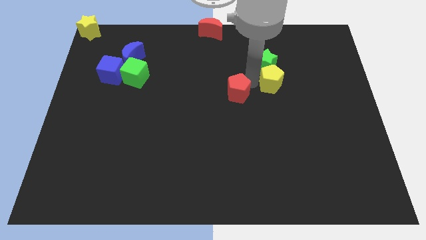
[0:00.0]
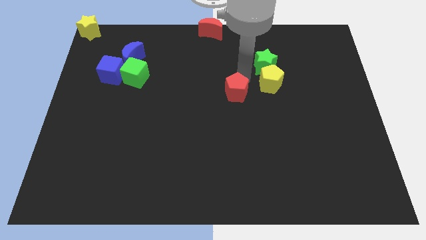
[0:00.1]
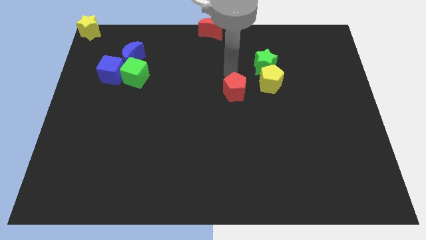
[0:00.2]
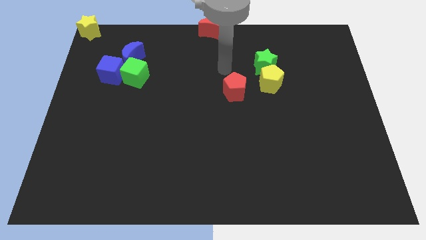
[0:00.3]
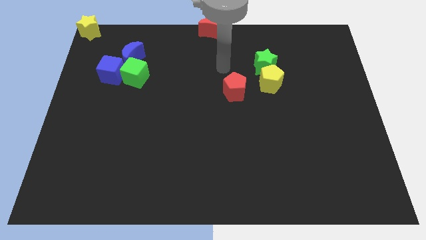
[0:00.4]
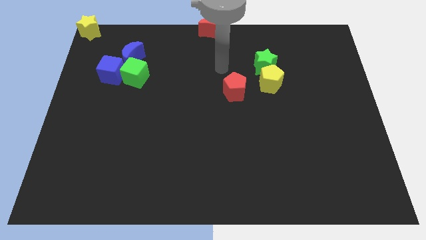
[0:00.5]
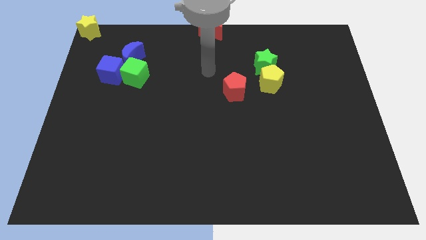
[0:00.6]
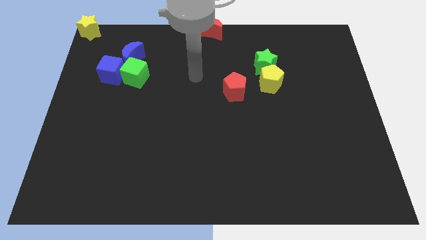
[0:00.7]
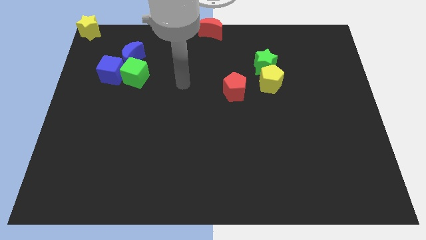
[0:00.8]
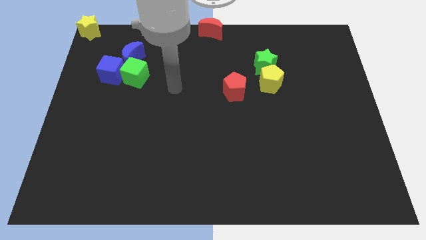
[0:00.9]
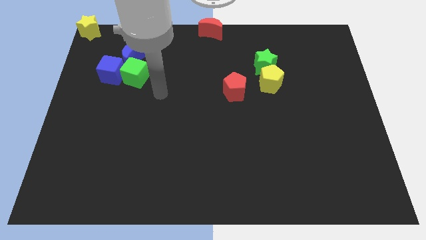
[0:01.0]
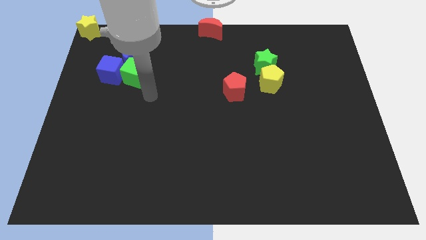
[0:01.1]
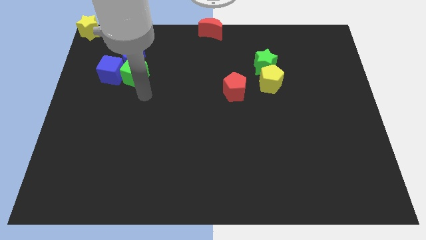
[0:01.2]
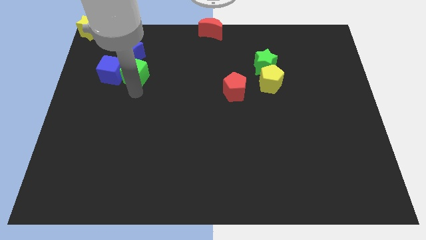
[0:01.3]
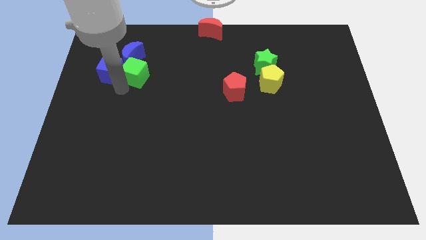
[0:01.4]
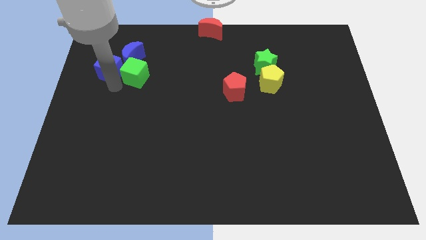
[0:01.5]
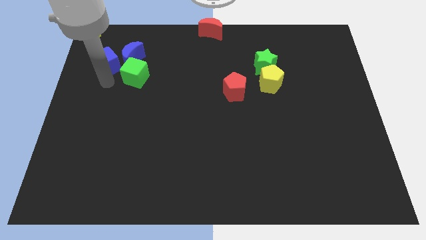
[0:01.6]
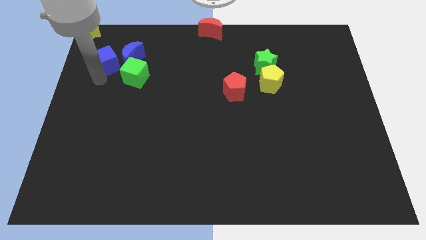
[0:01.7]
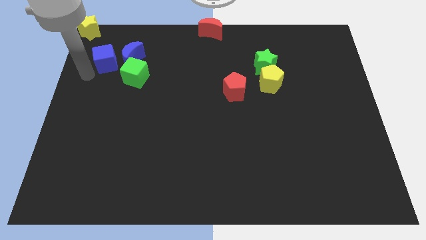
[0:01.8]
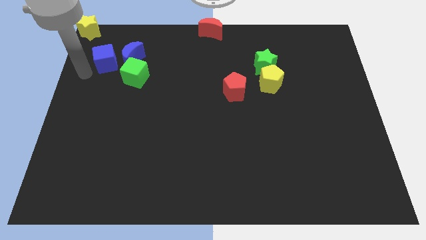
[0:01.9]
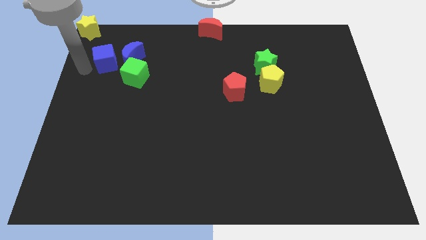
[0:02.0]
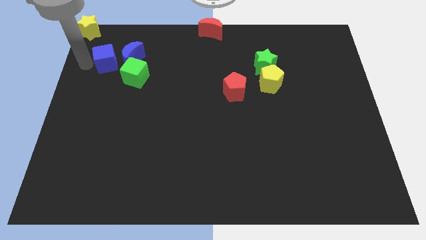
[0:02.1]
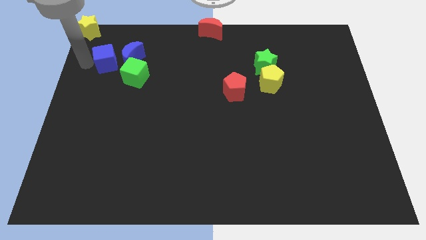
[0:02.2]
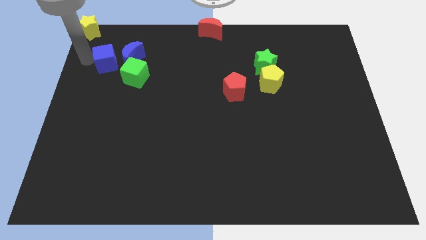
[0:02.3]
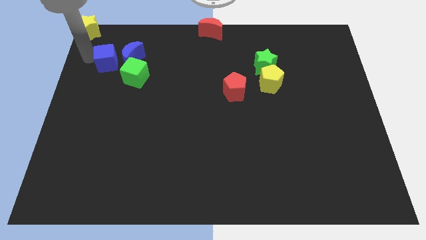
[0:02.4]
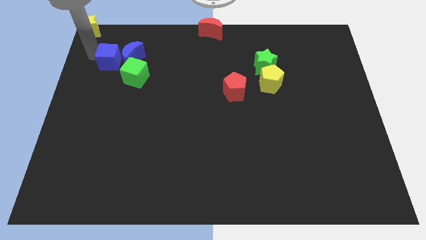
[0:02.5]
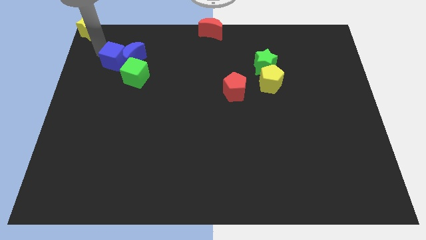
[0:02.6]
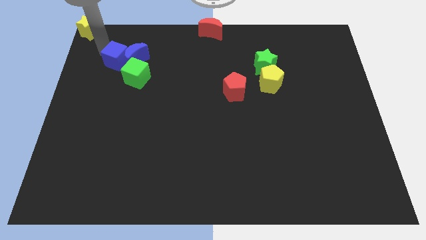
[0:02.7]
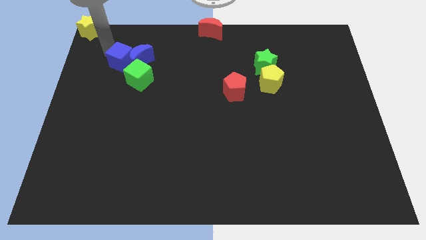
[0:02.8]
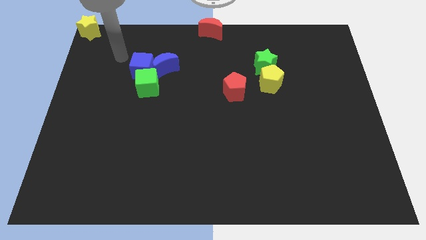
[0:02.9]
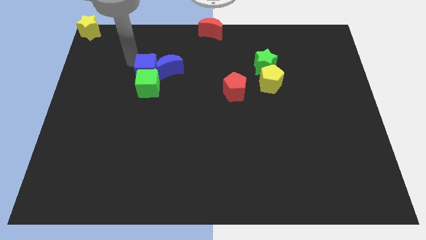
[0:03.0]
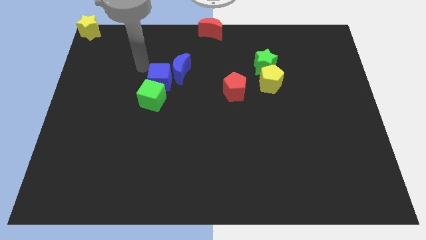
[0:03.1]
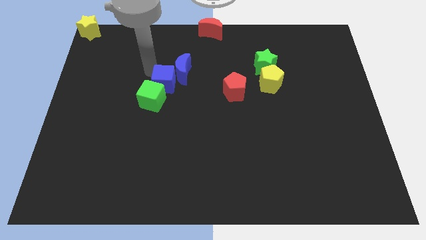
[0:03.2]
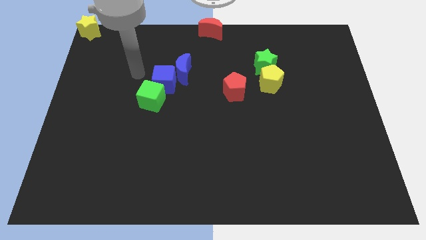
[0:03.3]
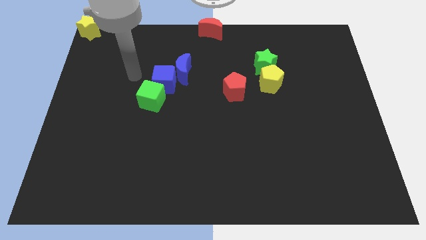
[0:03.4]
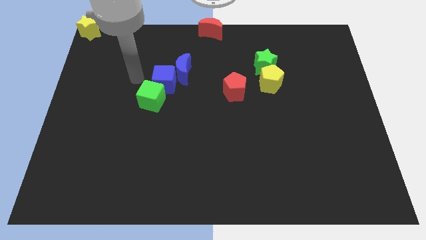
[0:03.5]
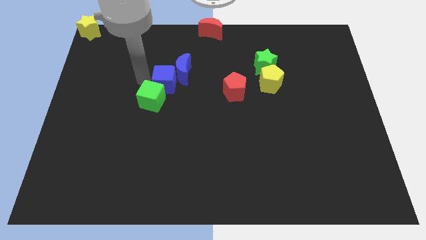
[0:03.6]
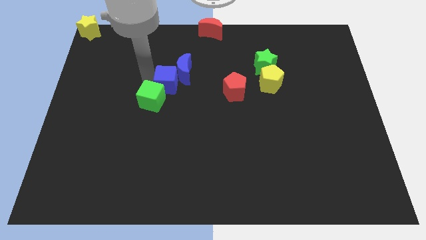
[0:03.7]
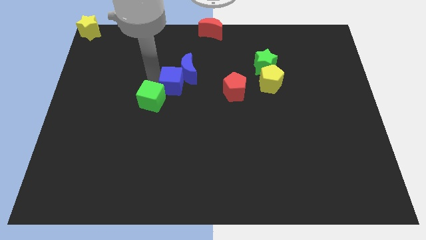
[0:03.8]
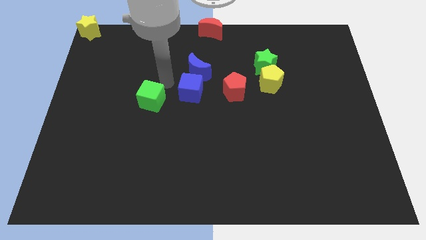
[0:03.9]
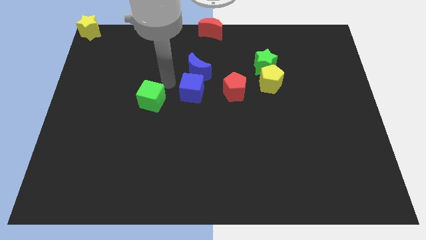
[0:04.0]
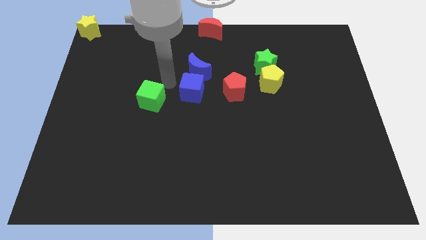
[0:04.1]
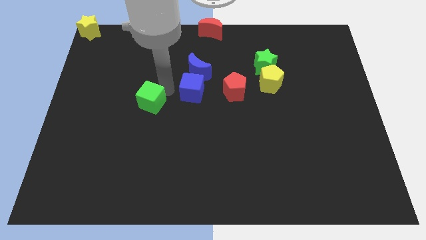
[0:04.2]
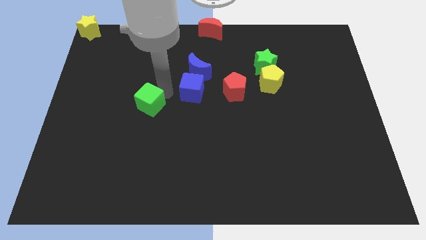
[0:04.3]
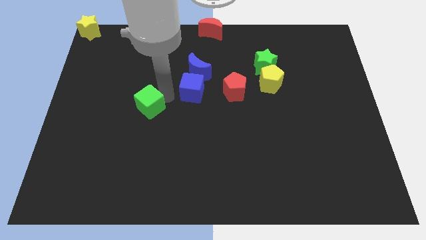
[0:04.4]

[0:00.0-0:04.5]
separate the green cube and blue cube

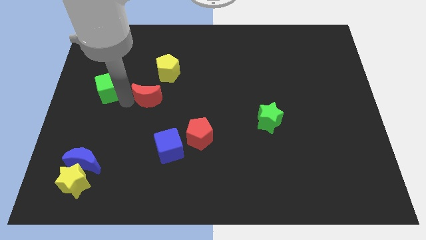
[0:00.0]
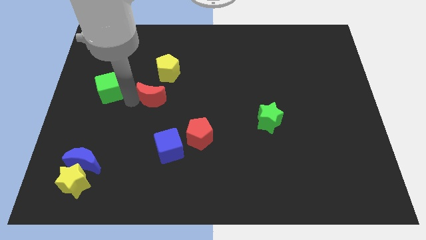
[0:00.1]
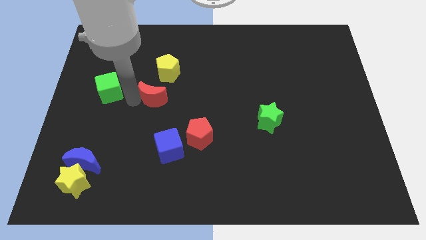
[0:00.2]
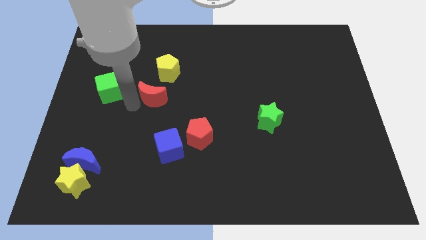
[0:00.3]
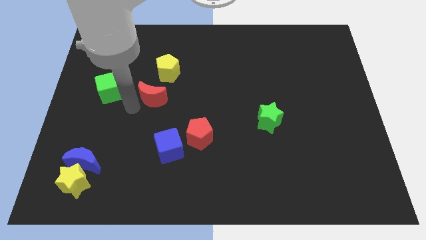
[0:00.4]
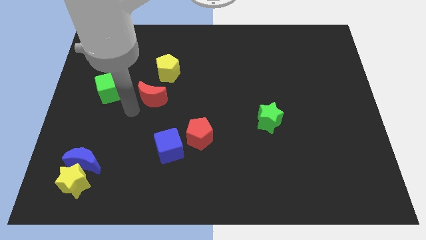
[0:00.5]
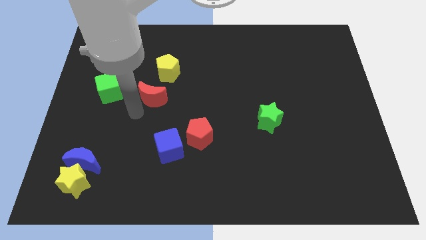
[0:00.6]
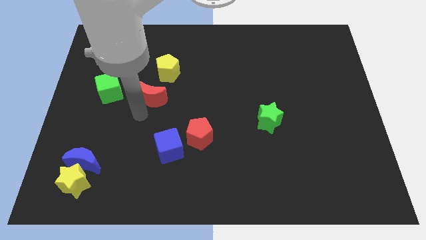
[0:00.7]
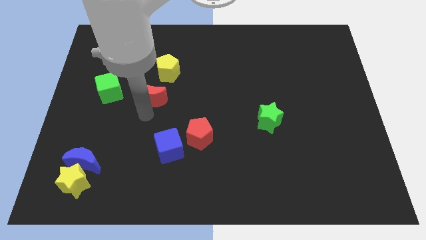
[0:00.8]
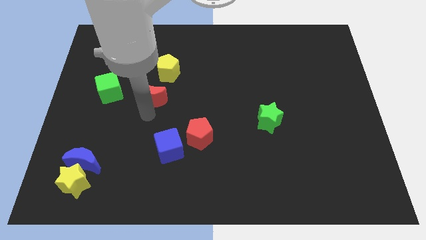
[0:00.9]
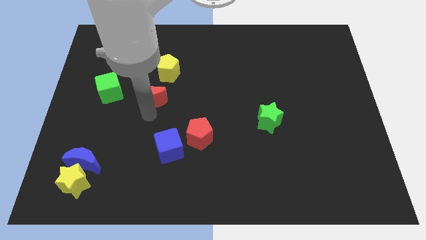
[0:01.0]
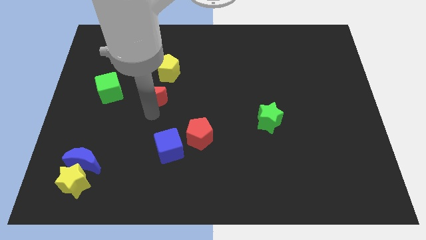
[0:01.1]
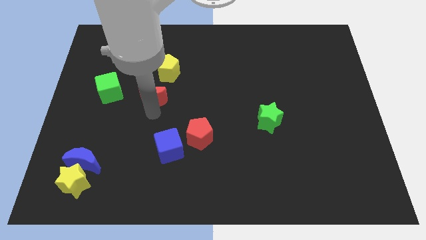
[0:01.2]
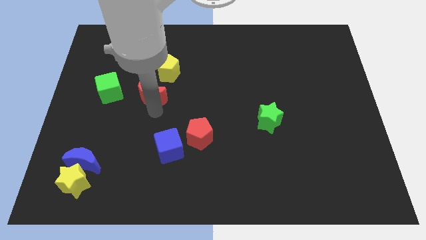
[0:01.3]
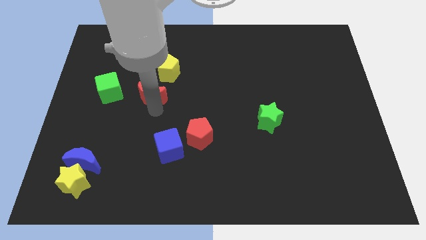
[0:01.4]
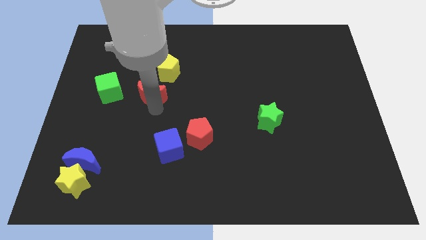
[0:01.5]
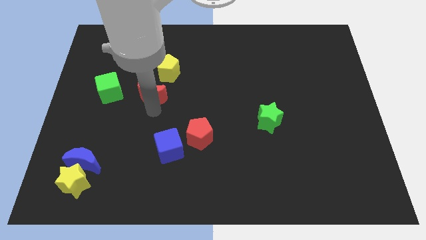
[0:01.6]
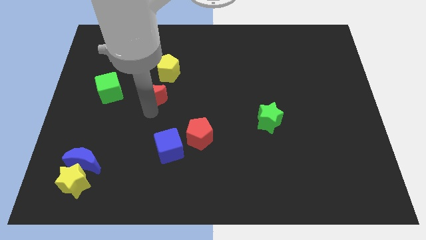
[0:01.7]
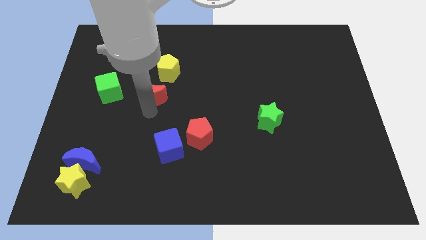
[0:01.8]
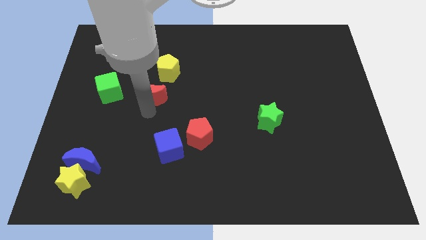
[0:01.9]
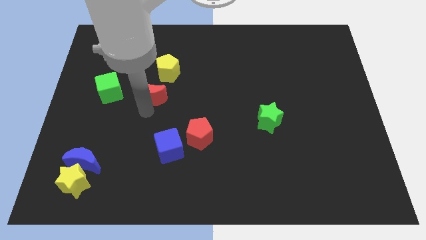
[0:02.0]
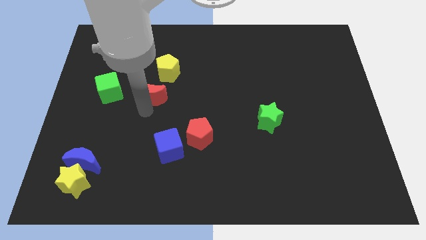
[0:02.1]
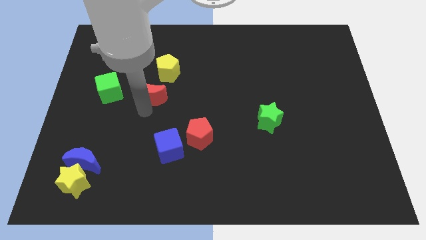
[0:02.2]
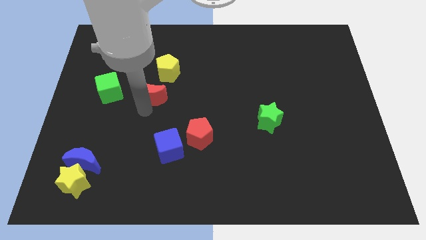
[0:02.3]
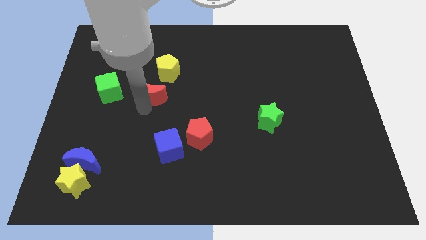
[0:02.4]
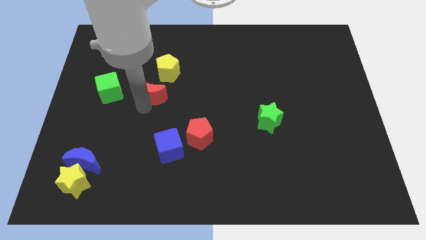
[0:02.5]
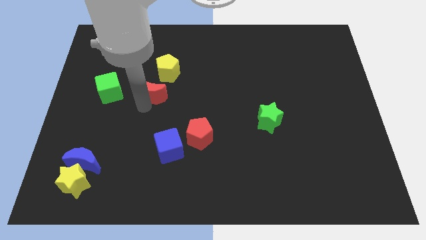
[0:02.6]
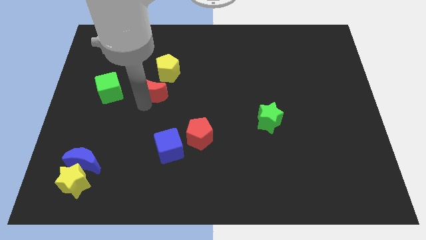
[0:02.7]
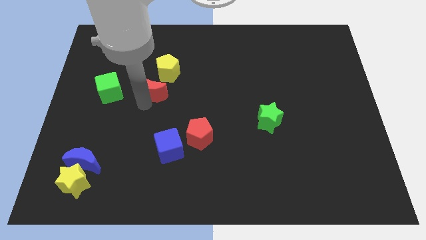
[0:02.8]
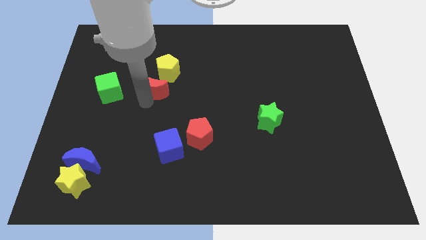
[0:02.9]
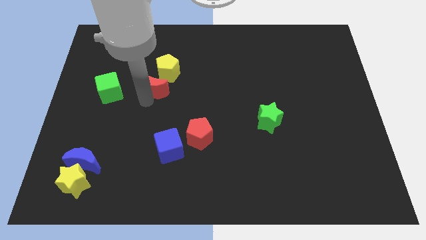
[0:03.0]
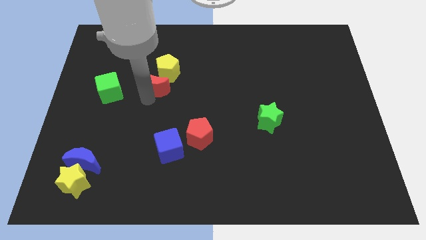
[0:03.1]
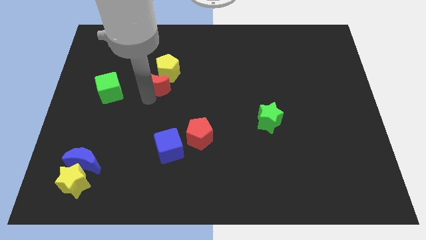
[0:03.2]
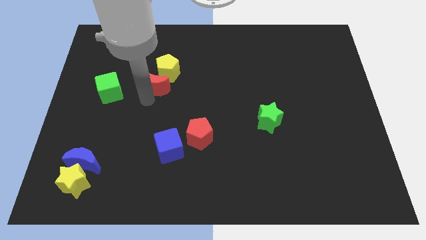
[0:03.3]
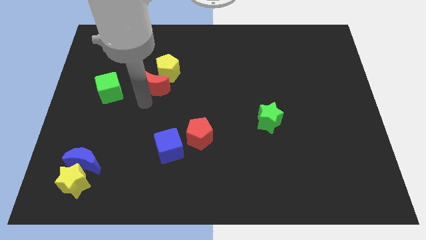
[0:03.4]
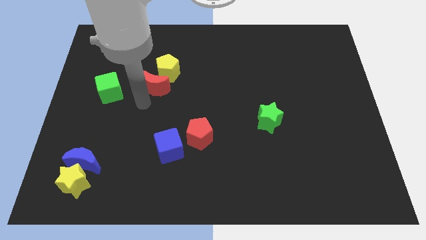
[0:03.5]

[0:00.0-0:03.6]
push the red moon into the yellow pentagon

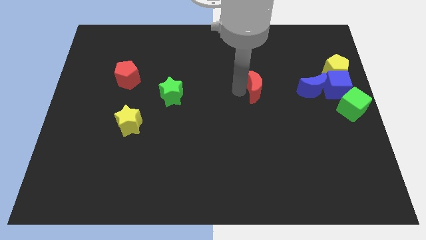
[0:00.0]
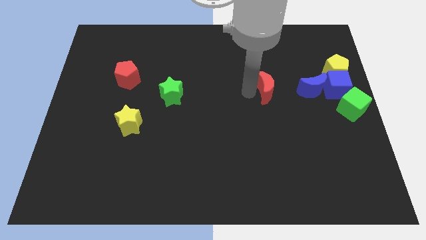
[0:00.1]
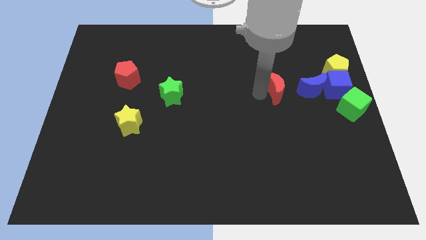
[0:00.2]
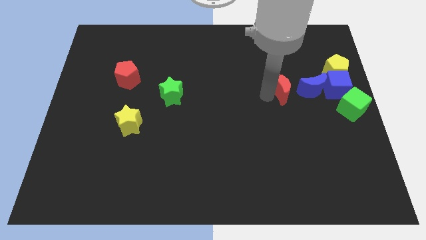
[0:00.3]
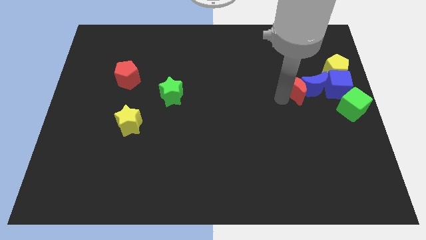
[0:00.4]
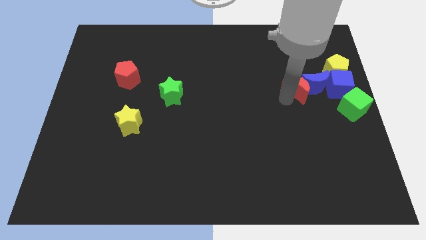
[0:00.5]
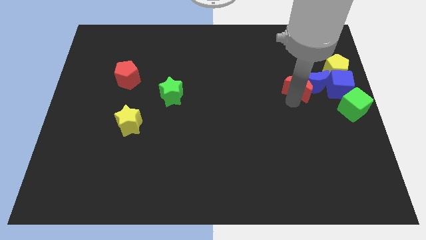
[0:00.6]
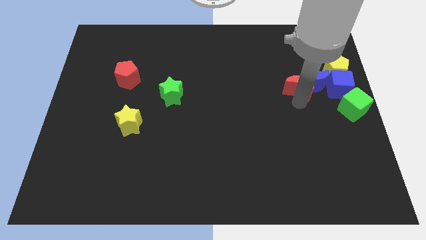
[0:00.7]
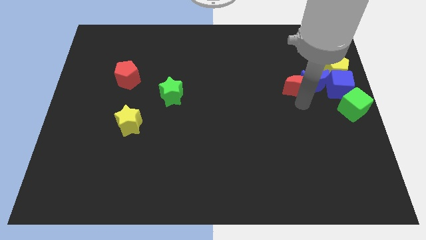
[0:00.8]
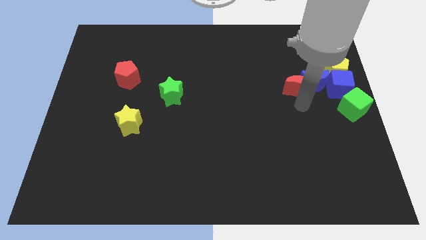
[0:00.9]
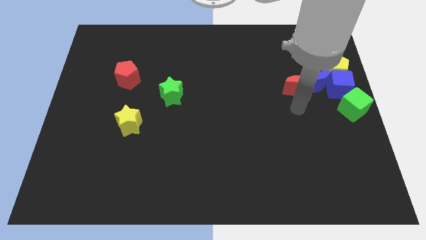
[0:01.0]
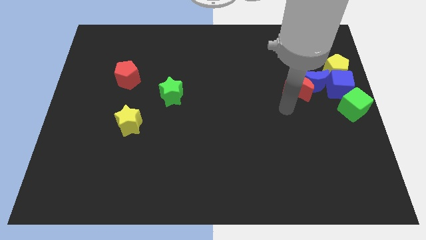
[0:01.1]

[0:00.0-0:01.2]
push red moon into blue moon
